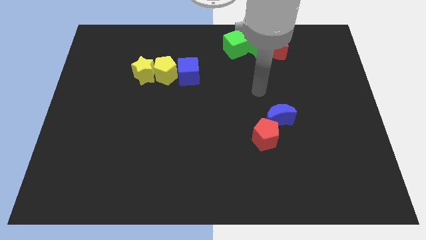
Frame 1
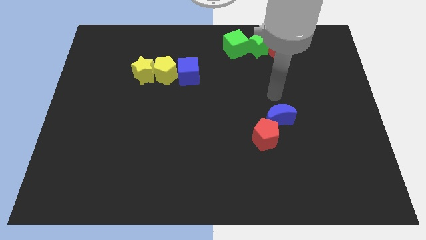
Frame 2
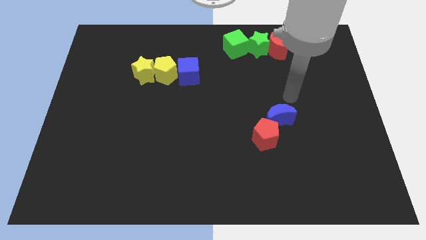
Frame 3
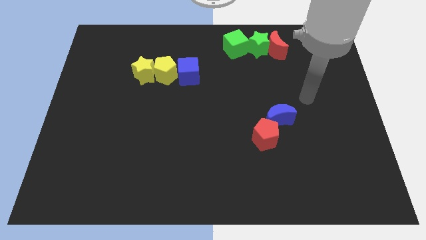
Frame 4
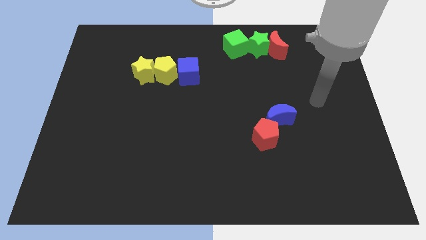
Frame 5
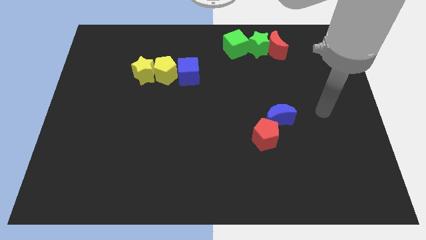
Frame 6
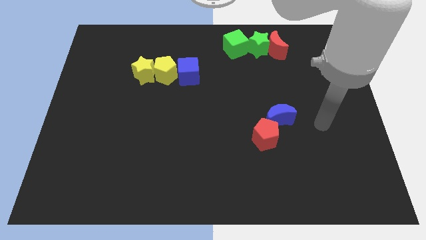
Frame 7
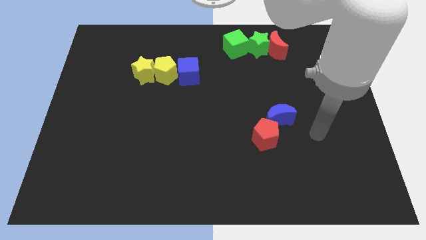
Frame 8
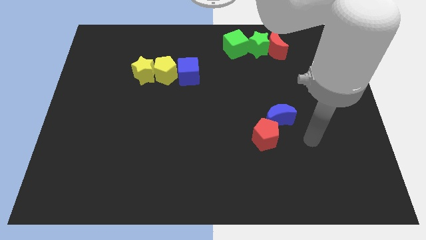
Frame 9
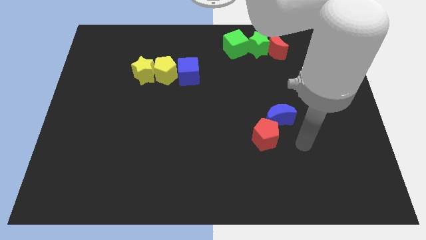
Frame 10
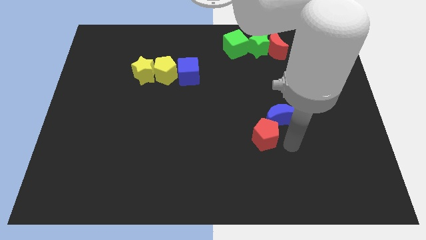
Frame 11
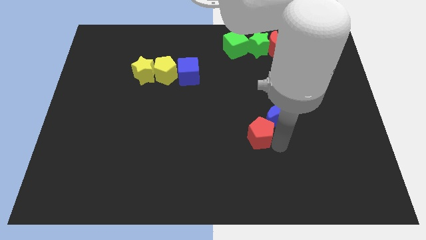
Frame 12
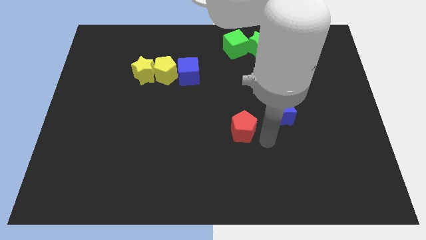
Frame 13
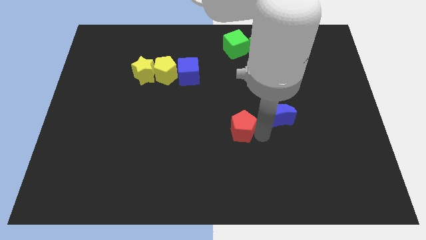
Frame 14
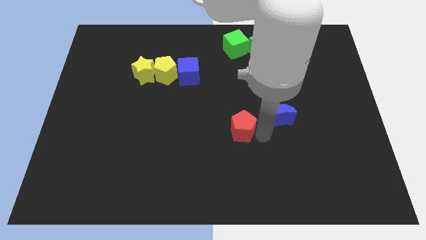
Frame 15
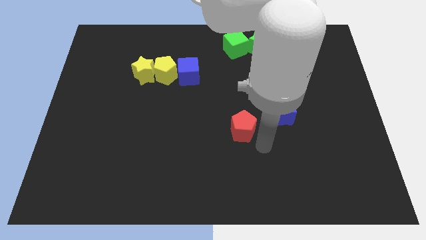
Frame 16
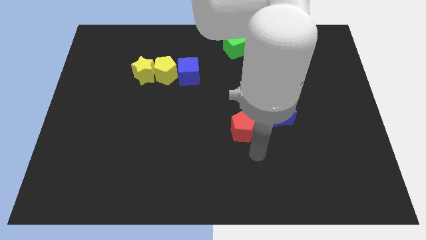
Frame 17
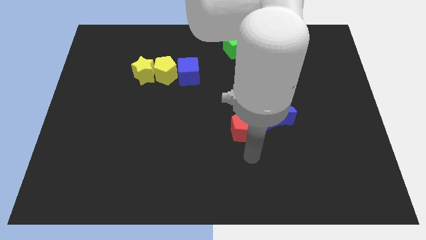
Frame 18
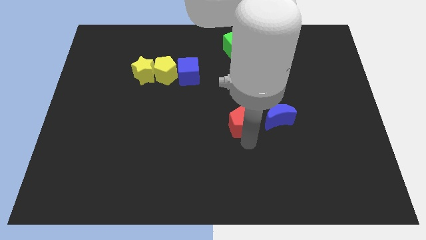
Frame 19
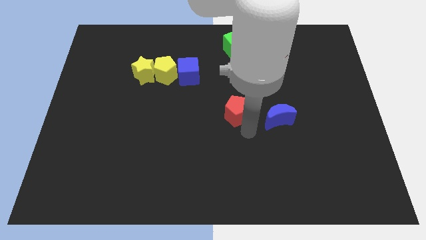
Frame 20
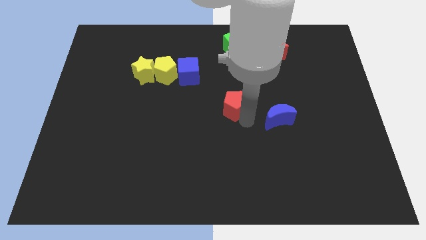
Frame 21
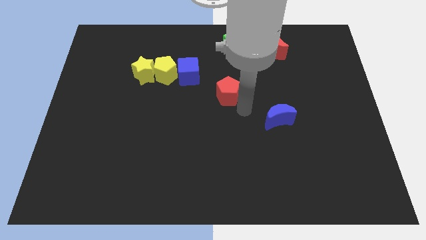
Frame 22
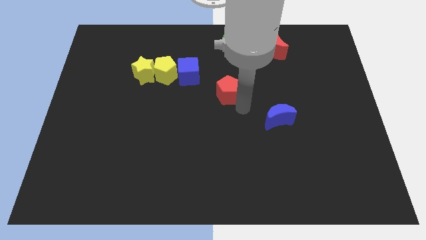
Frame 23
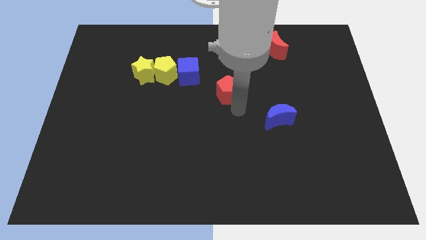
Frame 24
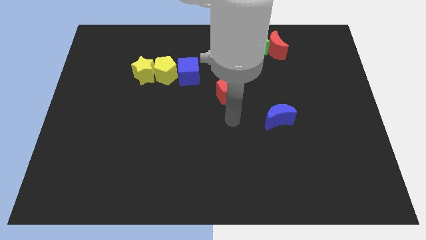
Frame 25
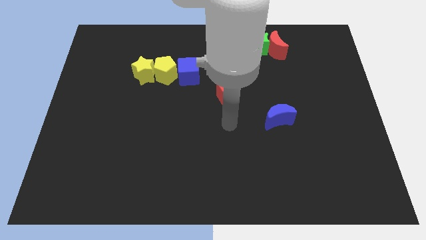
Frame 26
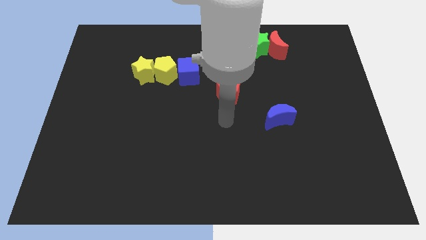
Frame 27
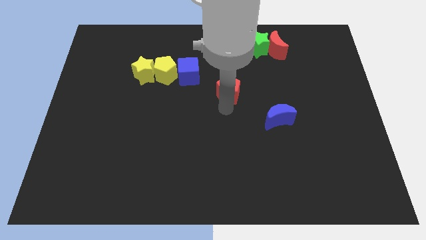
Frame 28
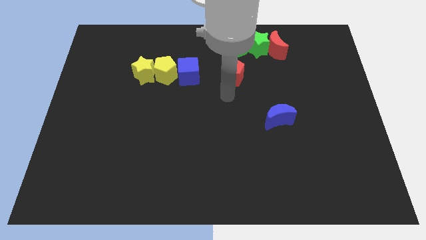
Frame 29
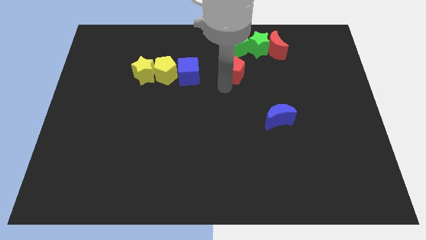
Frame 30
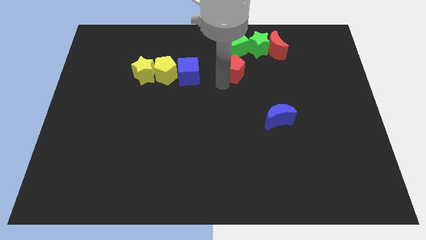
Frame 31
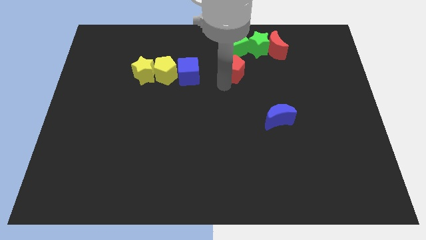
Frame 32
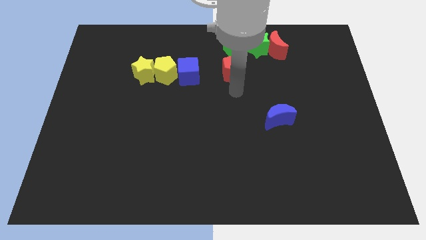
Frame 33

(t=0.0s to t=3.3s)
push the red pentagon to the bottom of the green cube

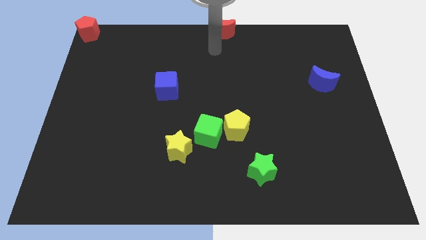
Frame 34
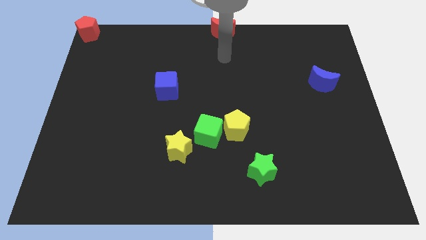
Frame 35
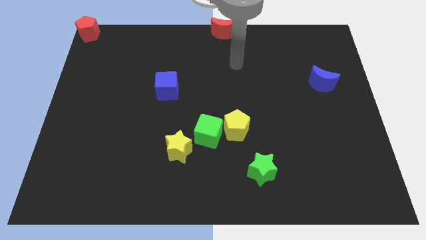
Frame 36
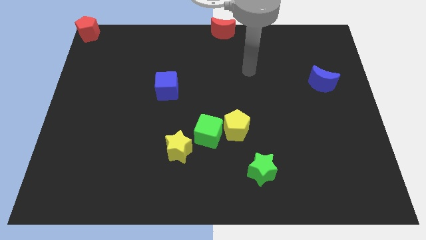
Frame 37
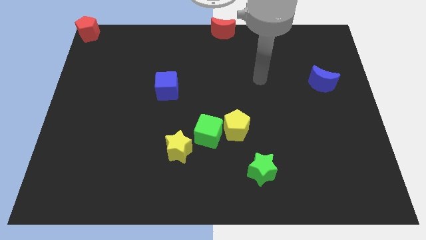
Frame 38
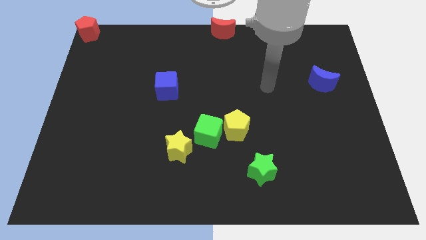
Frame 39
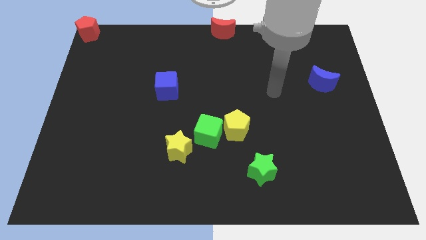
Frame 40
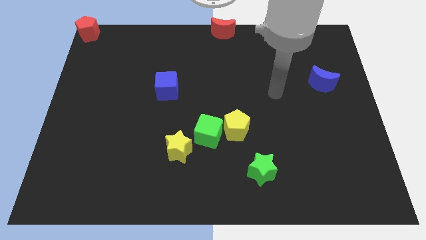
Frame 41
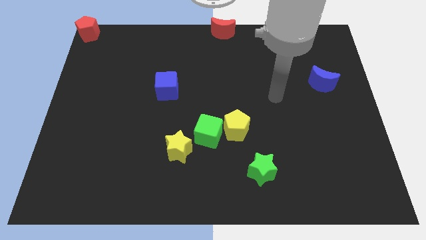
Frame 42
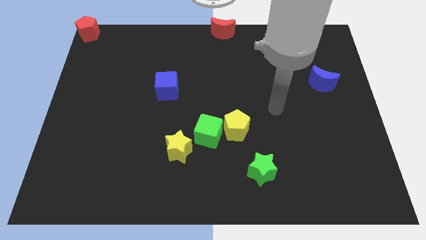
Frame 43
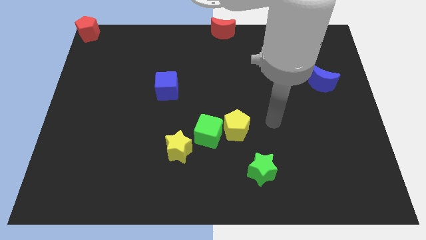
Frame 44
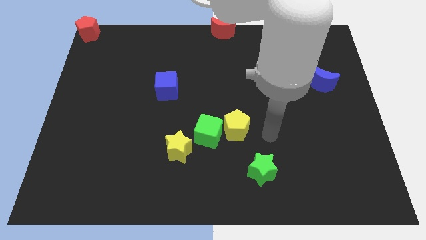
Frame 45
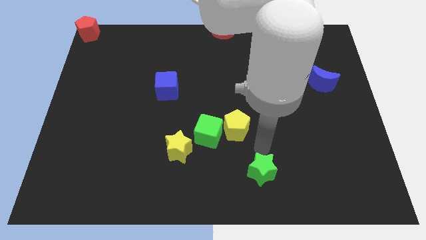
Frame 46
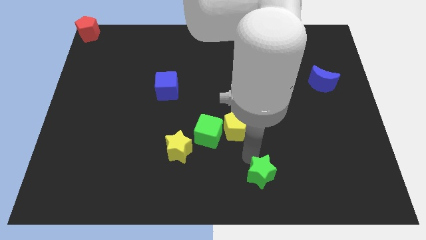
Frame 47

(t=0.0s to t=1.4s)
move your arm to the top of the green star

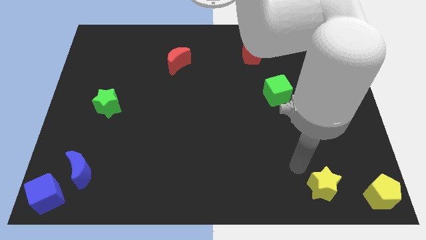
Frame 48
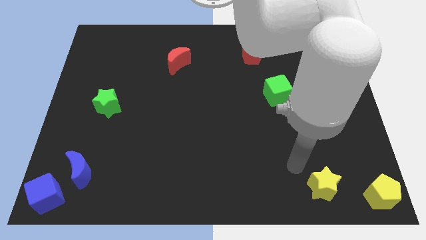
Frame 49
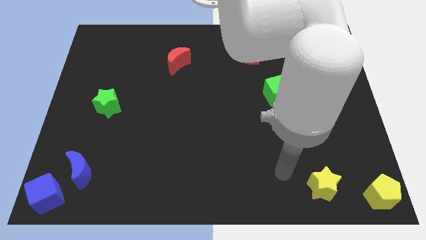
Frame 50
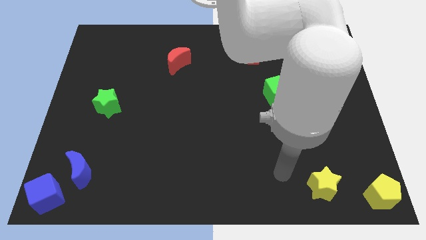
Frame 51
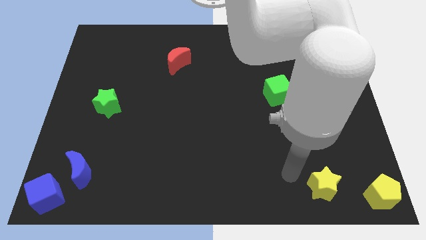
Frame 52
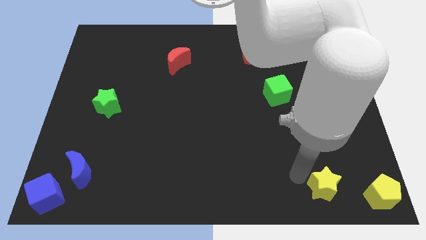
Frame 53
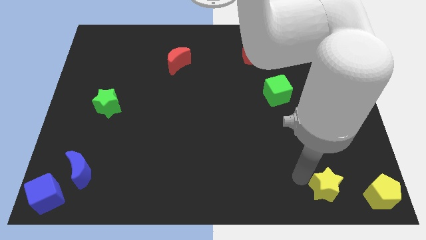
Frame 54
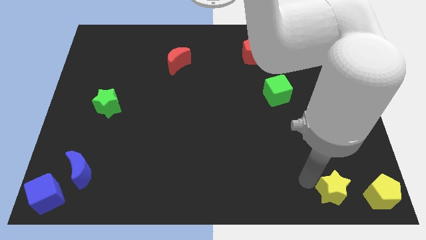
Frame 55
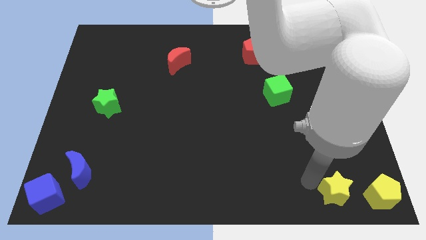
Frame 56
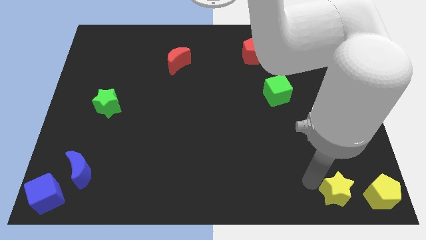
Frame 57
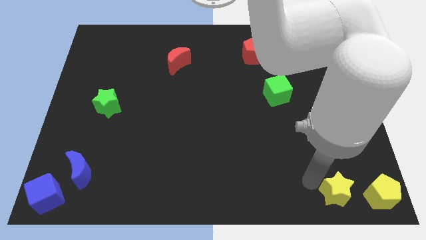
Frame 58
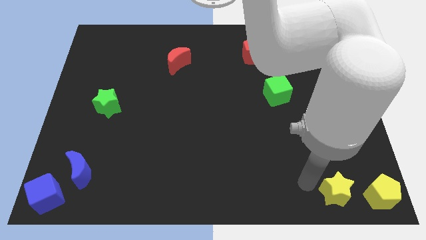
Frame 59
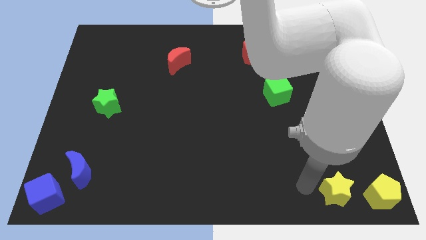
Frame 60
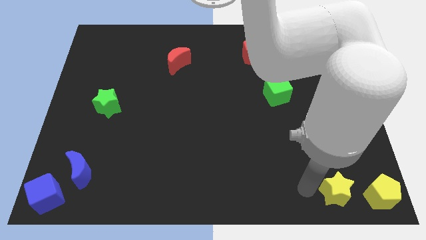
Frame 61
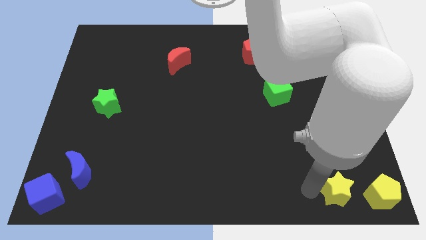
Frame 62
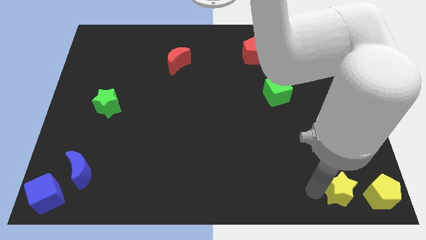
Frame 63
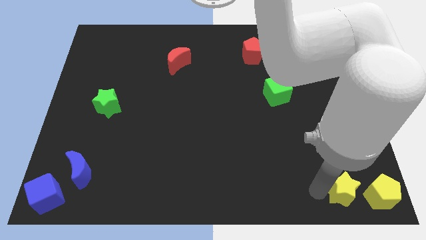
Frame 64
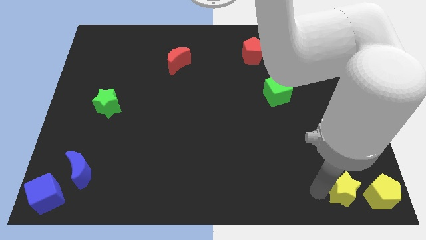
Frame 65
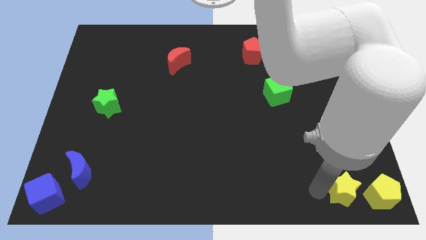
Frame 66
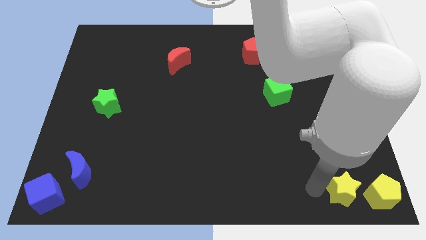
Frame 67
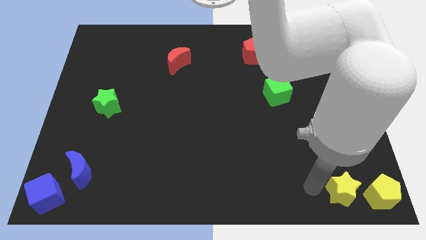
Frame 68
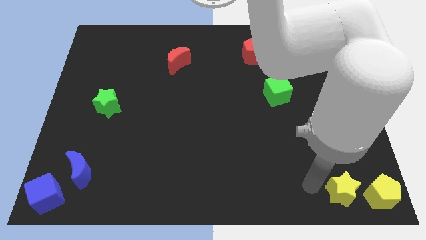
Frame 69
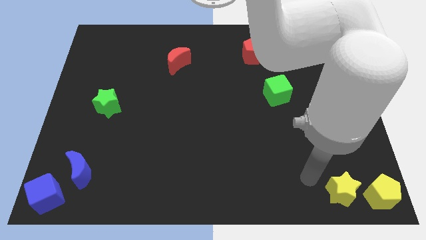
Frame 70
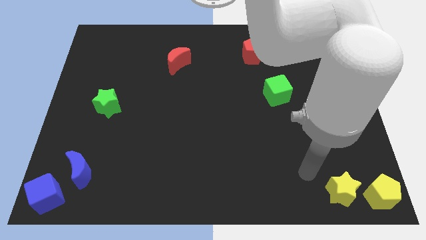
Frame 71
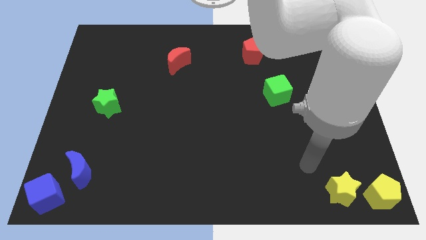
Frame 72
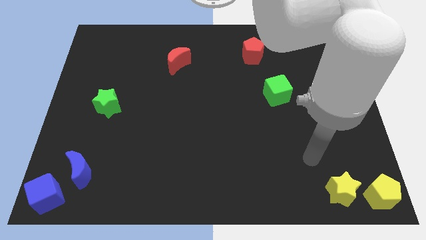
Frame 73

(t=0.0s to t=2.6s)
move the yellow star left to the yellow pentagon

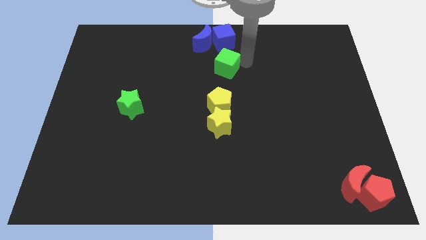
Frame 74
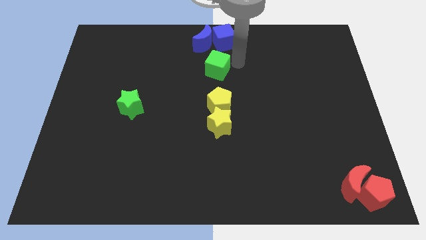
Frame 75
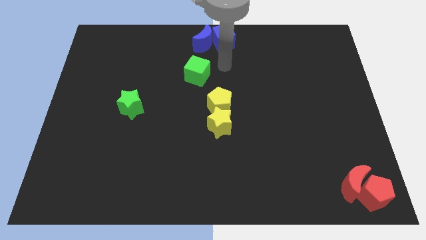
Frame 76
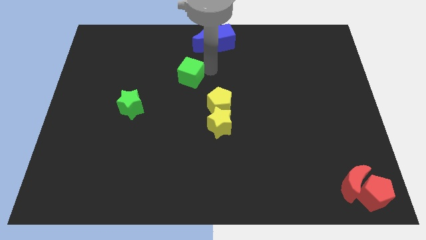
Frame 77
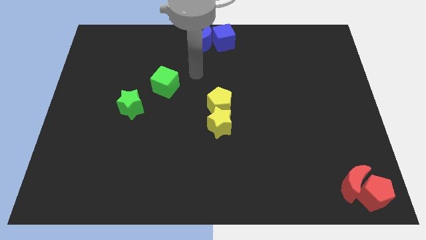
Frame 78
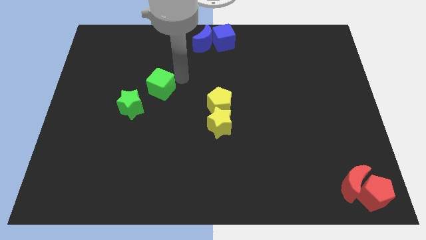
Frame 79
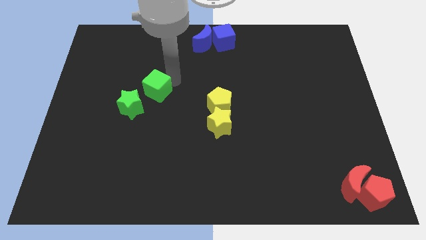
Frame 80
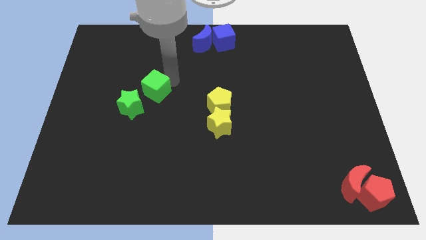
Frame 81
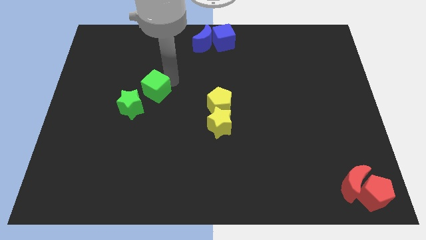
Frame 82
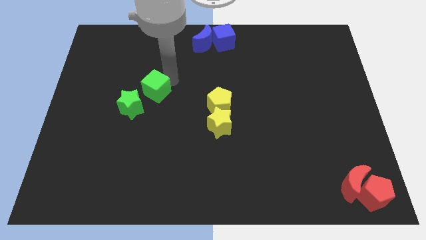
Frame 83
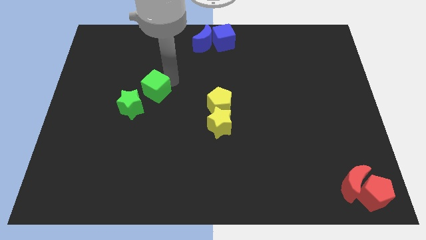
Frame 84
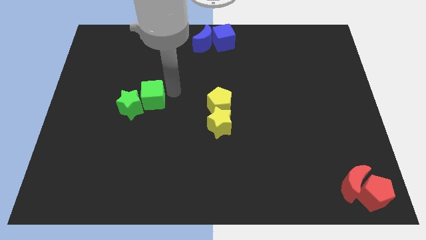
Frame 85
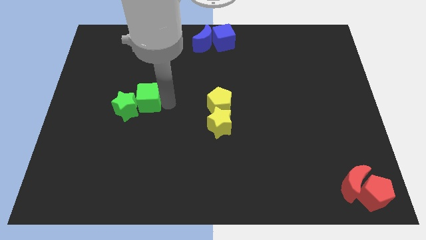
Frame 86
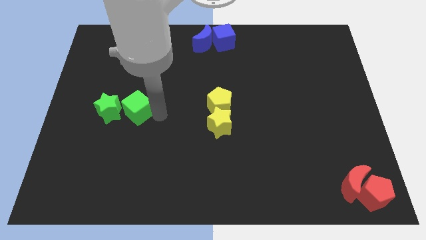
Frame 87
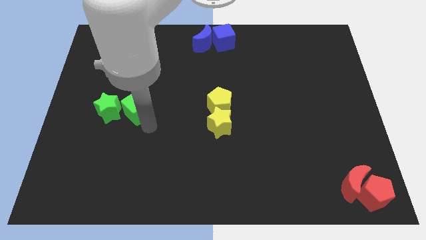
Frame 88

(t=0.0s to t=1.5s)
drag the green cube close to the green star

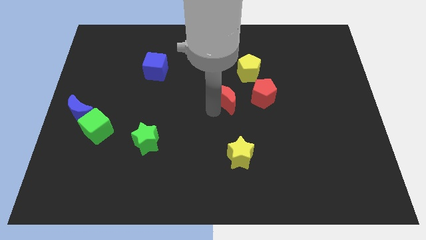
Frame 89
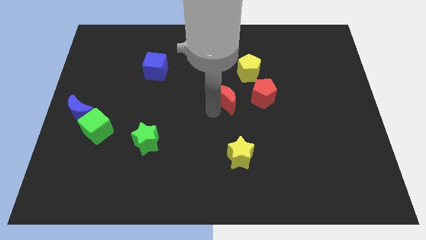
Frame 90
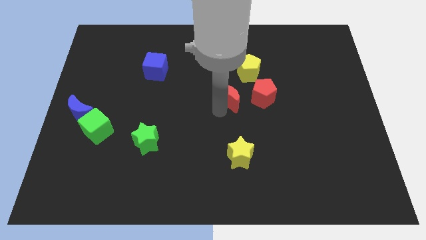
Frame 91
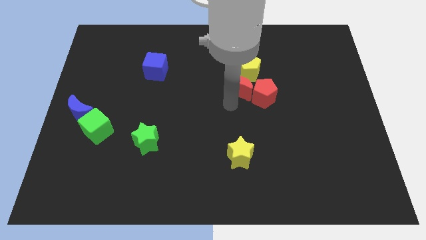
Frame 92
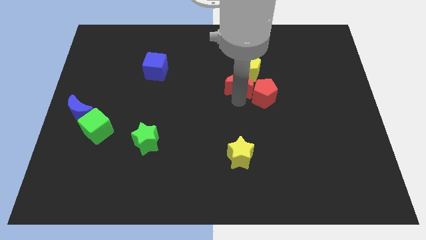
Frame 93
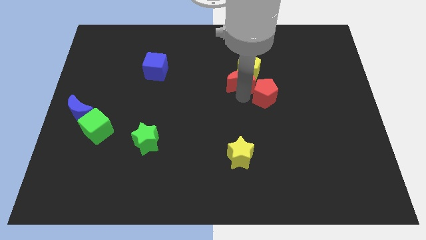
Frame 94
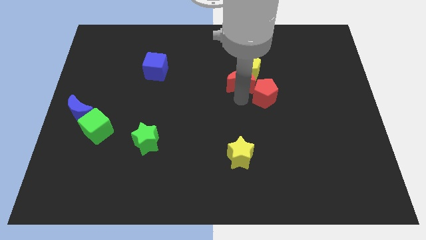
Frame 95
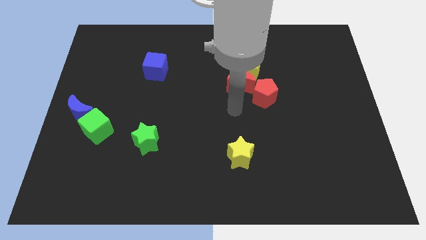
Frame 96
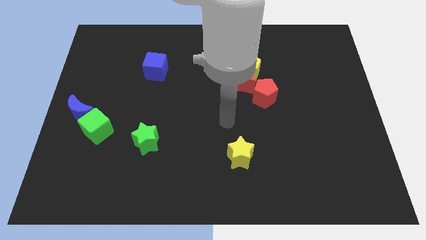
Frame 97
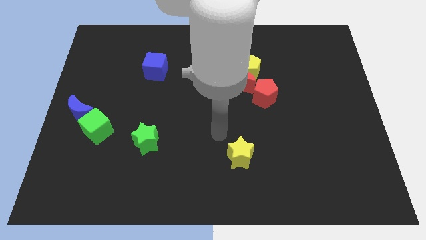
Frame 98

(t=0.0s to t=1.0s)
move the red crescent into the red pentagon
